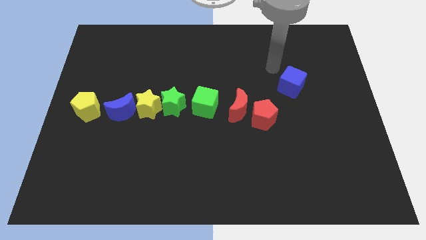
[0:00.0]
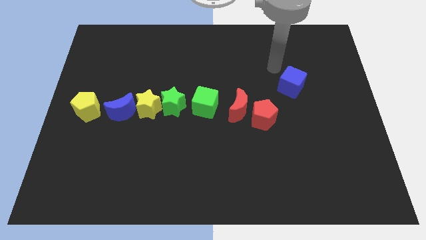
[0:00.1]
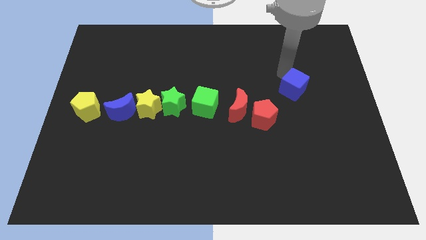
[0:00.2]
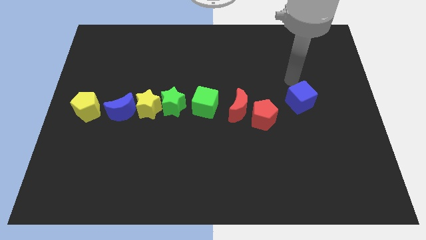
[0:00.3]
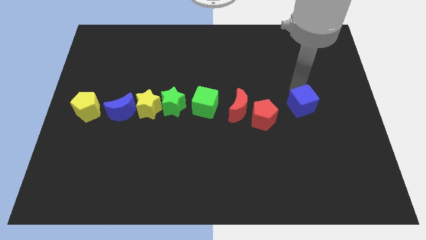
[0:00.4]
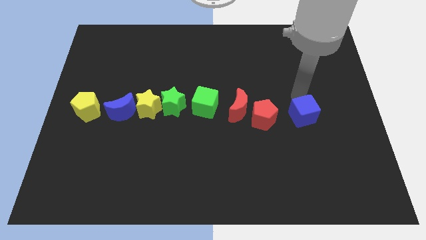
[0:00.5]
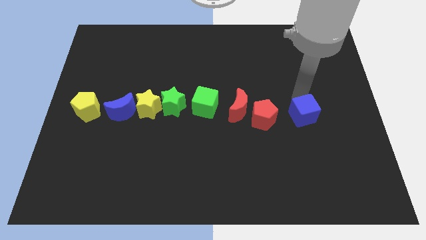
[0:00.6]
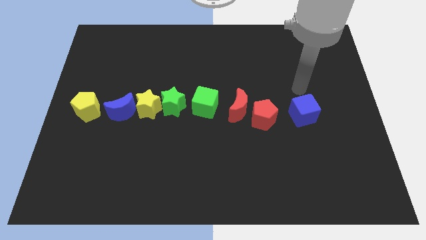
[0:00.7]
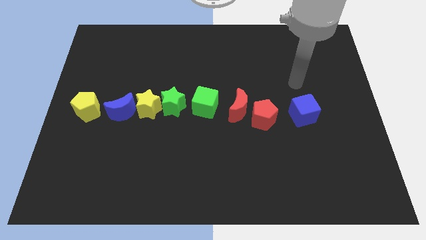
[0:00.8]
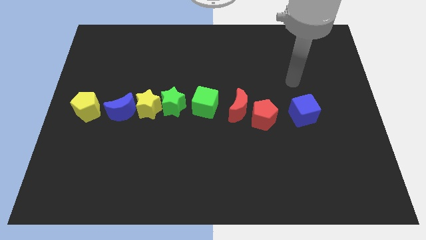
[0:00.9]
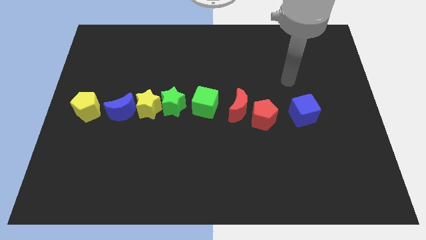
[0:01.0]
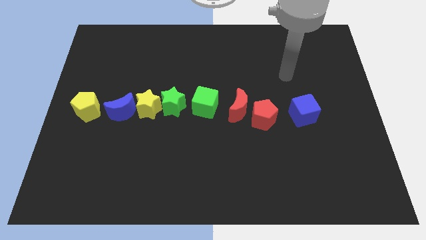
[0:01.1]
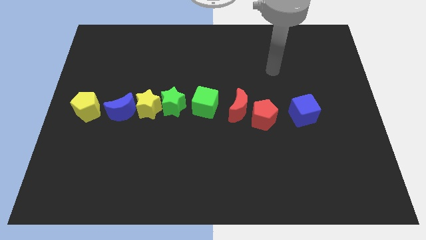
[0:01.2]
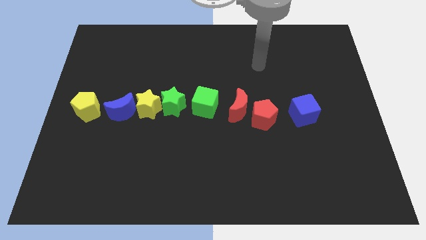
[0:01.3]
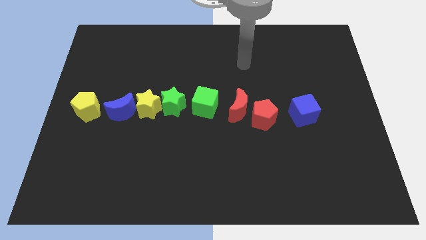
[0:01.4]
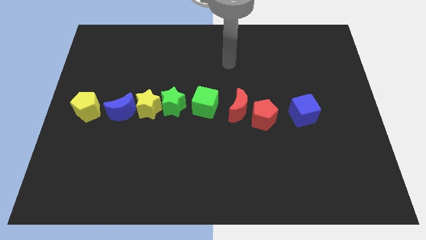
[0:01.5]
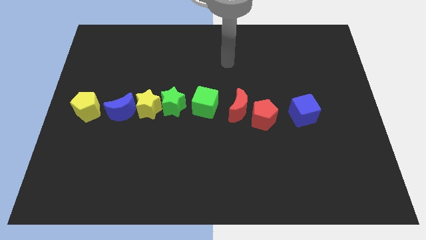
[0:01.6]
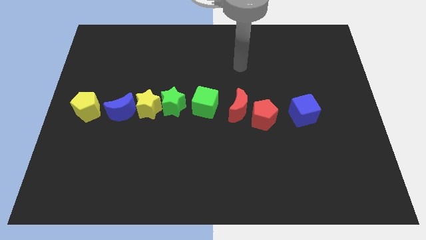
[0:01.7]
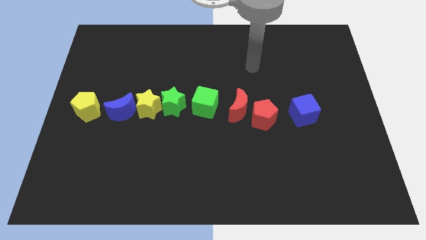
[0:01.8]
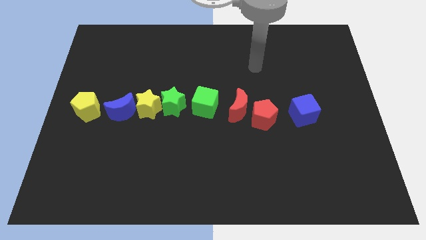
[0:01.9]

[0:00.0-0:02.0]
place the blue cube to the right of the horizontal line of blocks

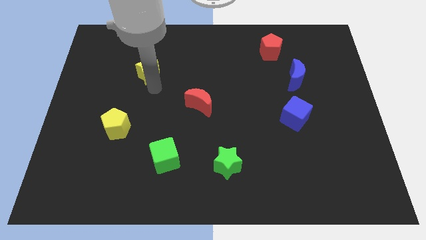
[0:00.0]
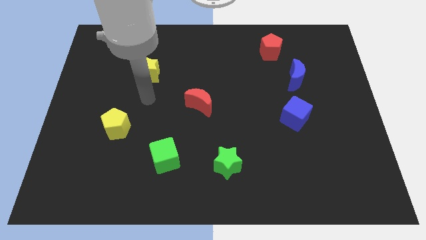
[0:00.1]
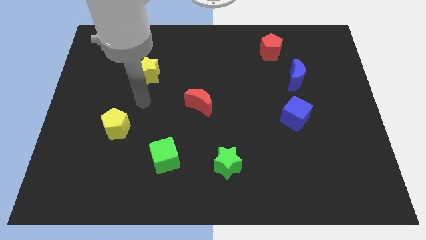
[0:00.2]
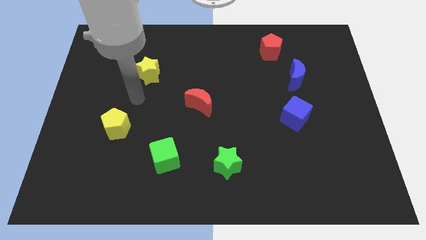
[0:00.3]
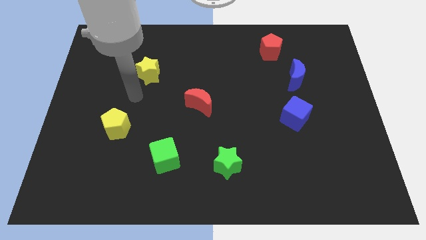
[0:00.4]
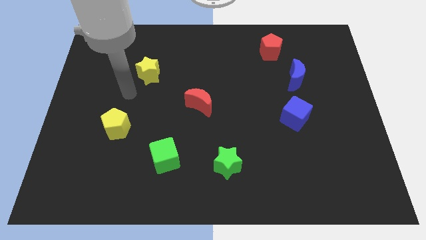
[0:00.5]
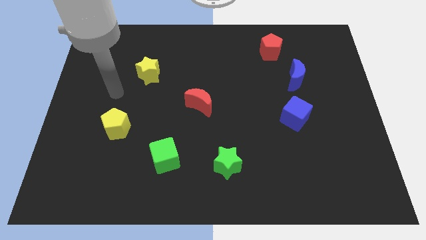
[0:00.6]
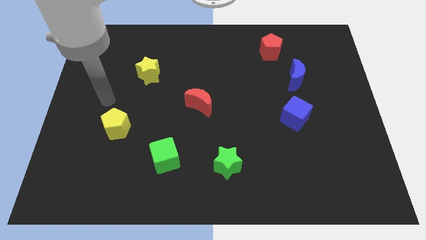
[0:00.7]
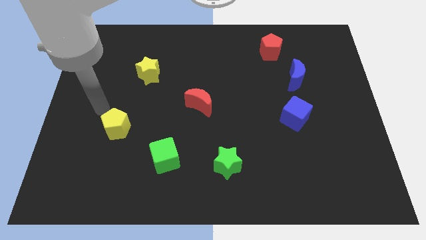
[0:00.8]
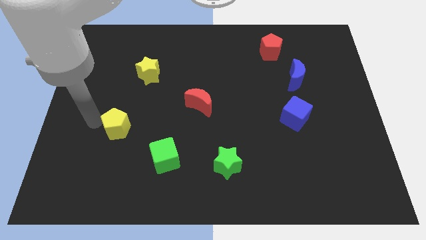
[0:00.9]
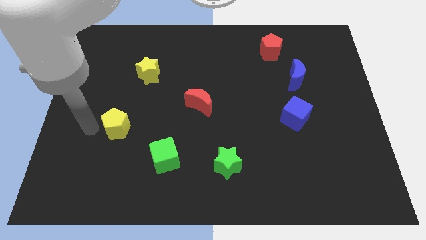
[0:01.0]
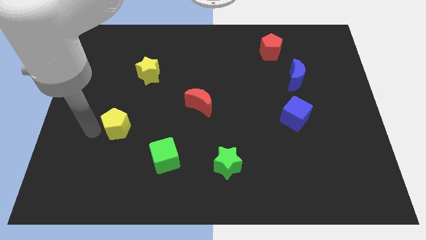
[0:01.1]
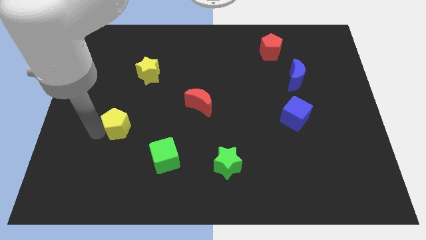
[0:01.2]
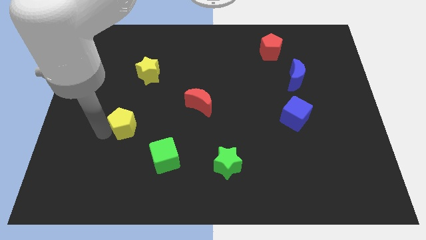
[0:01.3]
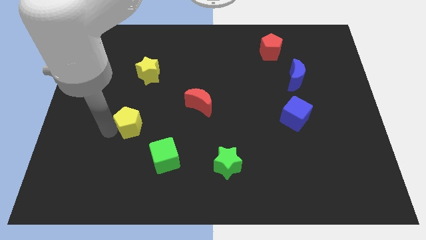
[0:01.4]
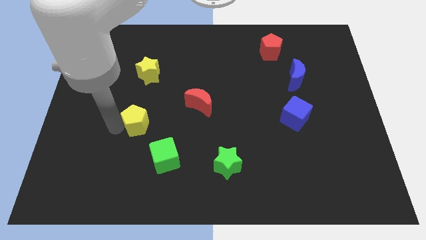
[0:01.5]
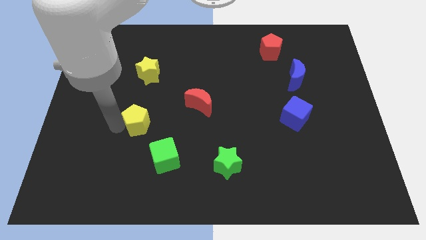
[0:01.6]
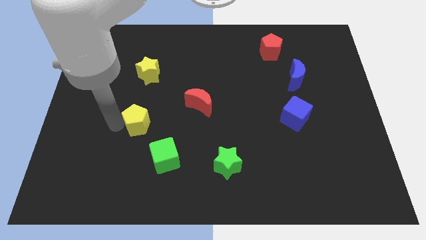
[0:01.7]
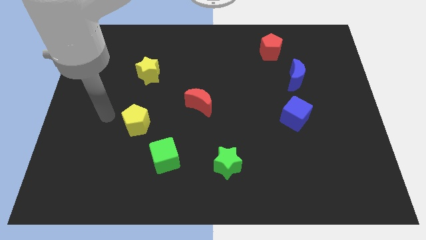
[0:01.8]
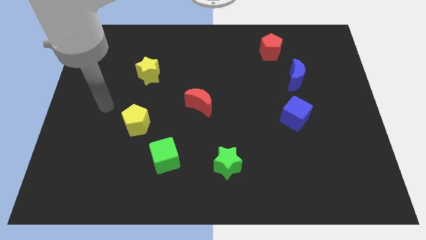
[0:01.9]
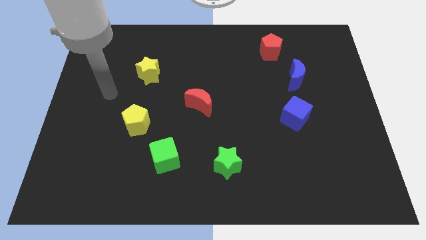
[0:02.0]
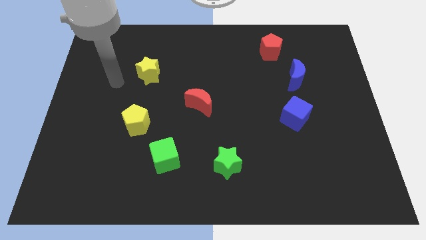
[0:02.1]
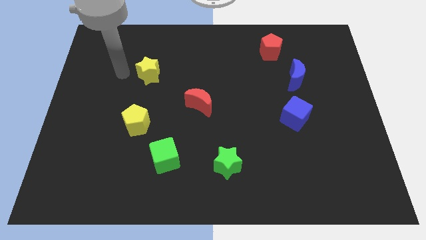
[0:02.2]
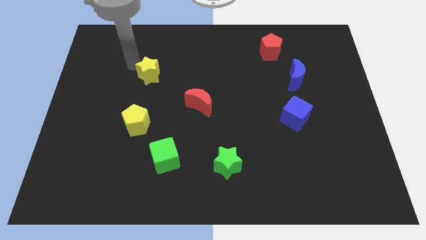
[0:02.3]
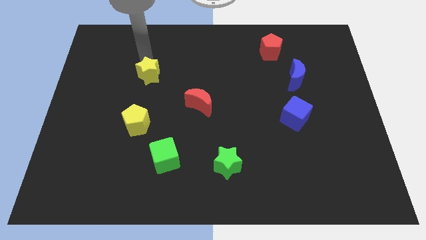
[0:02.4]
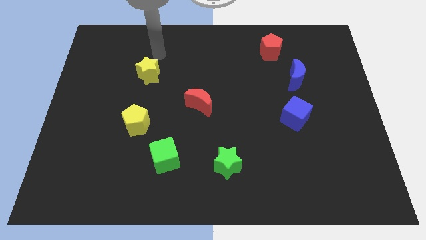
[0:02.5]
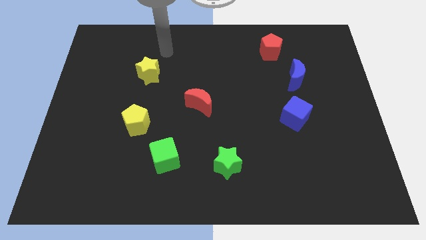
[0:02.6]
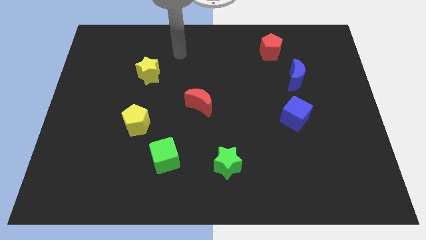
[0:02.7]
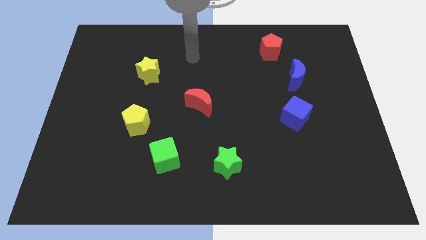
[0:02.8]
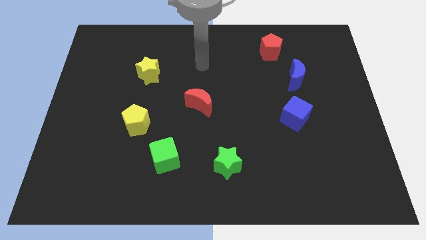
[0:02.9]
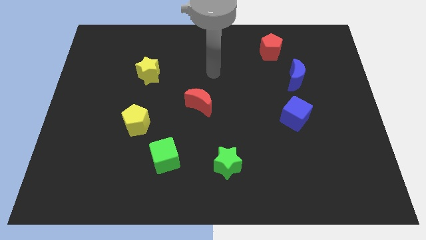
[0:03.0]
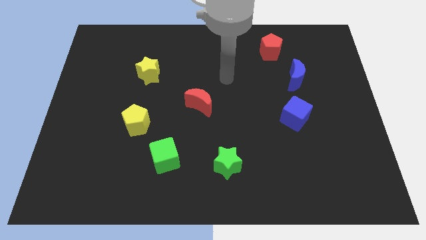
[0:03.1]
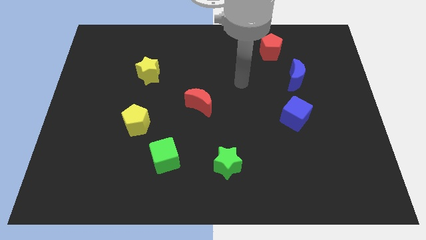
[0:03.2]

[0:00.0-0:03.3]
place the yellow pentagon diagonally below the bottom the left side of the red crescent

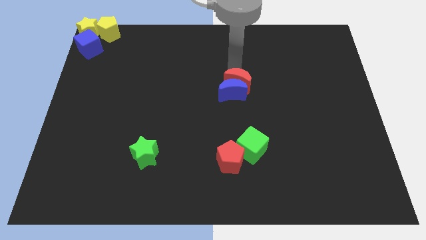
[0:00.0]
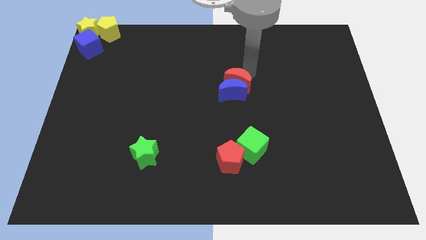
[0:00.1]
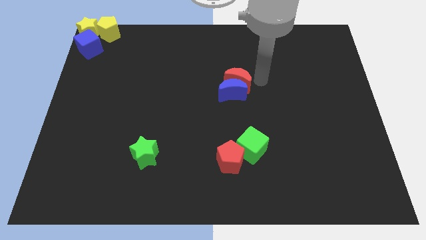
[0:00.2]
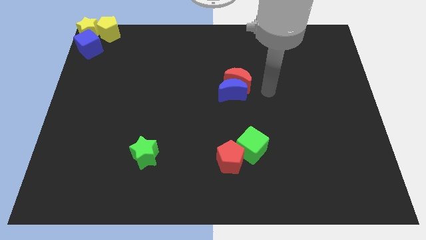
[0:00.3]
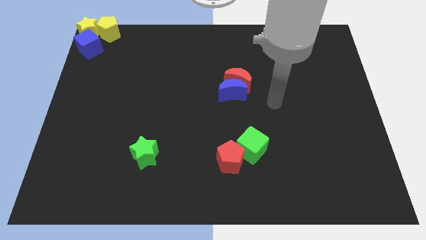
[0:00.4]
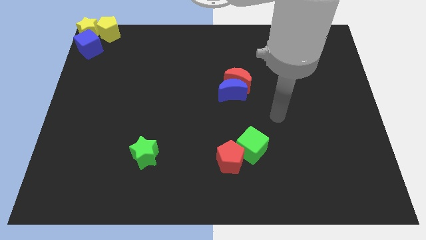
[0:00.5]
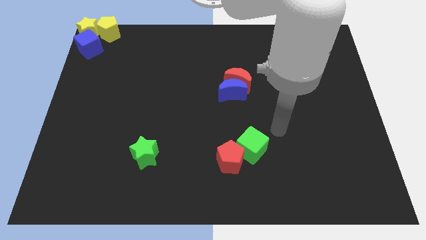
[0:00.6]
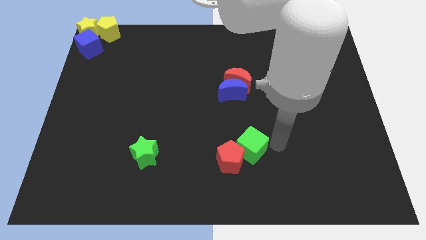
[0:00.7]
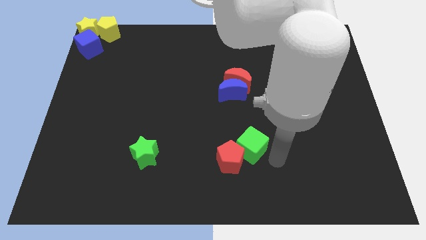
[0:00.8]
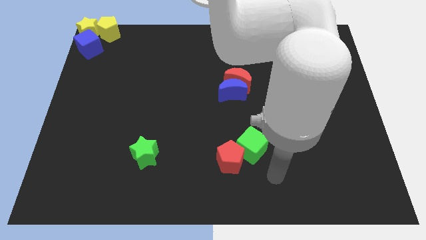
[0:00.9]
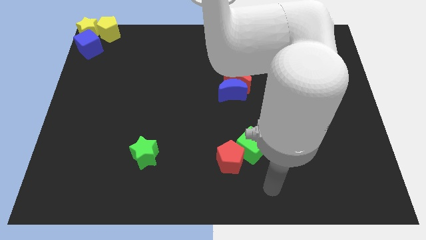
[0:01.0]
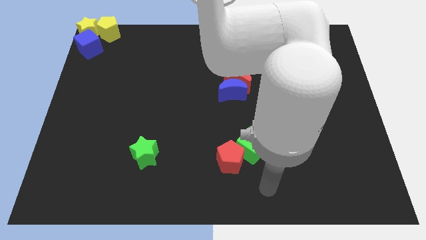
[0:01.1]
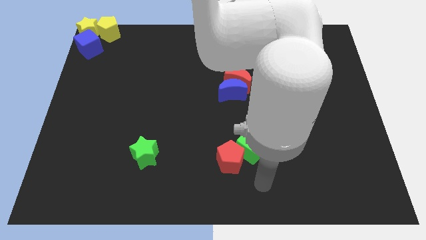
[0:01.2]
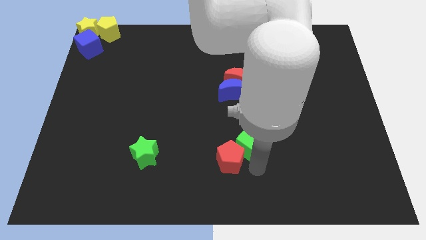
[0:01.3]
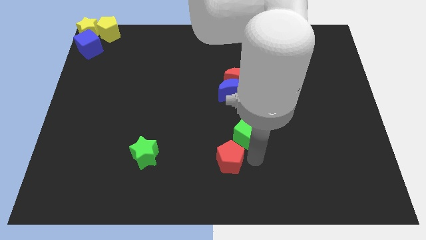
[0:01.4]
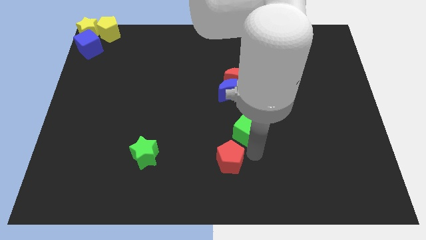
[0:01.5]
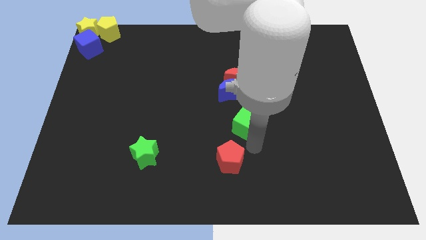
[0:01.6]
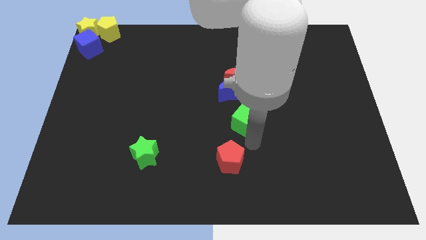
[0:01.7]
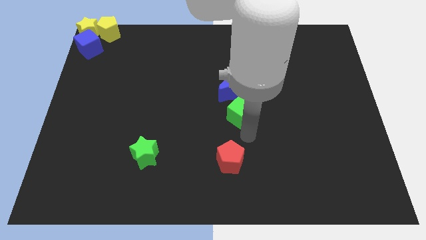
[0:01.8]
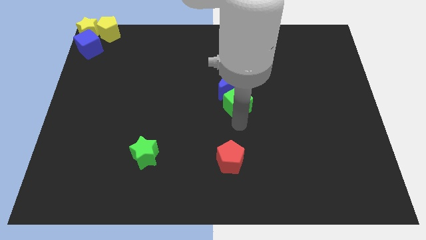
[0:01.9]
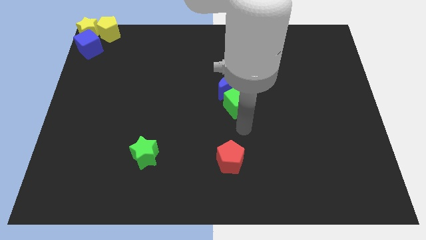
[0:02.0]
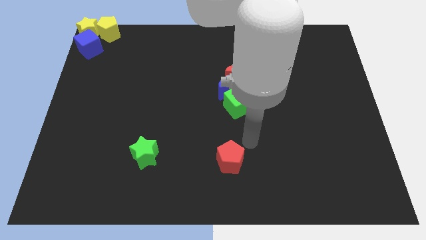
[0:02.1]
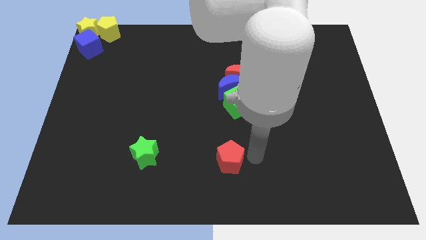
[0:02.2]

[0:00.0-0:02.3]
push the green cube into the blue moon

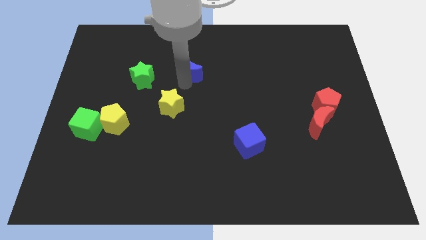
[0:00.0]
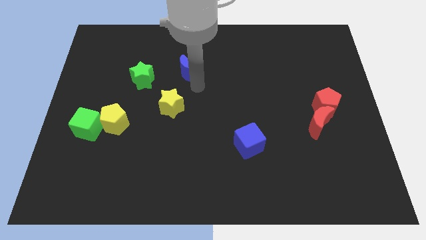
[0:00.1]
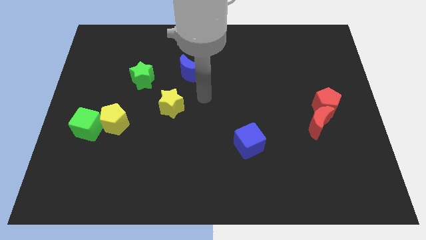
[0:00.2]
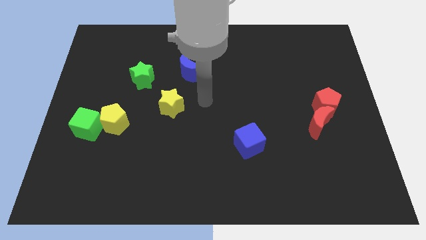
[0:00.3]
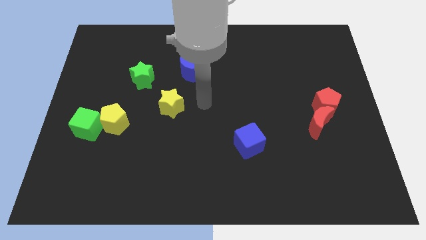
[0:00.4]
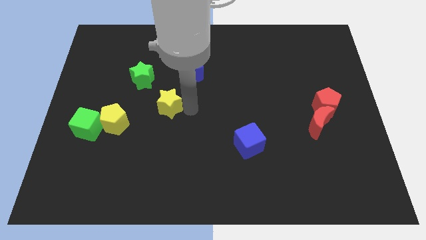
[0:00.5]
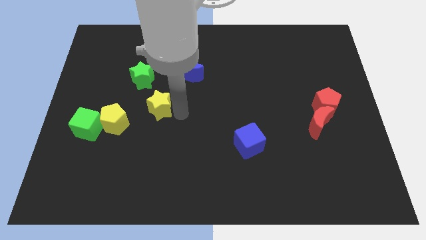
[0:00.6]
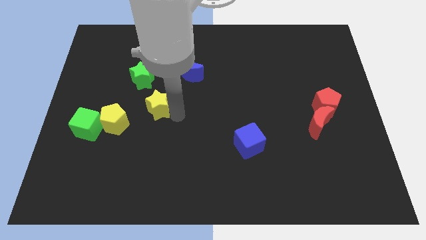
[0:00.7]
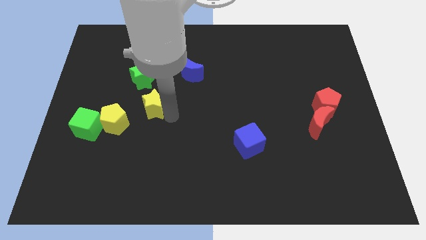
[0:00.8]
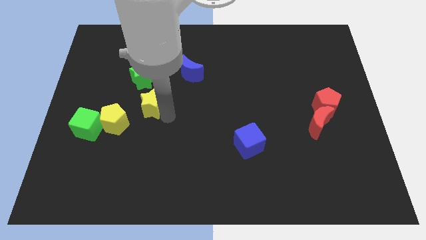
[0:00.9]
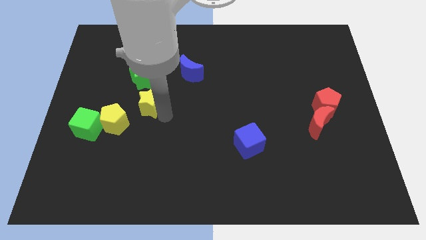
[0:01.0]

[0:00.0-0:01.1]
separate yellow star and blue moon

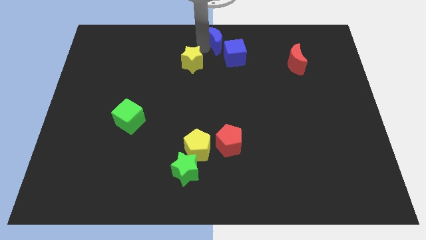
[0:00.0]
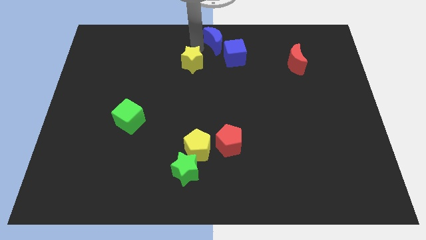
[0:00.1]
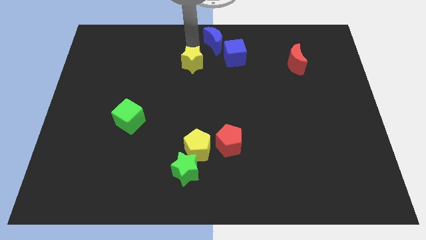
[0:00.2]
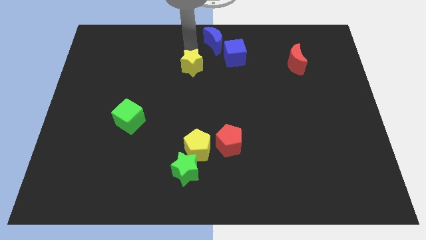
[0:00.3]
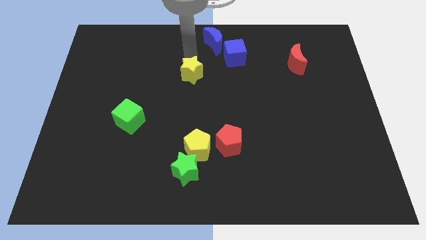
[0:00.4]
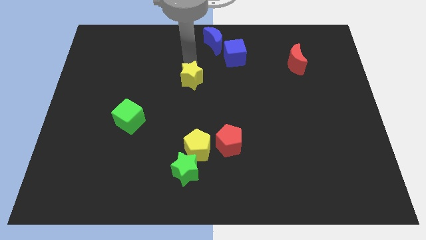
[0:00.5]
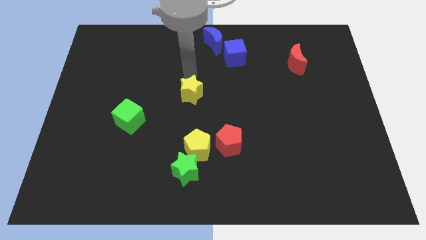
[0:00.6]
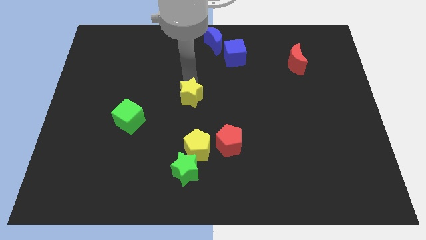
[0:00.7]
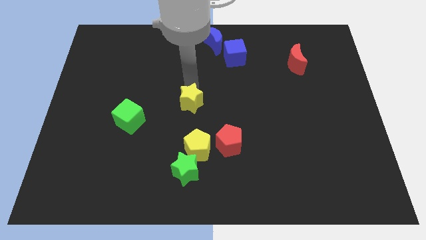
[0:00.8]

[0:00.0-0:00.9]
move the yellow star to the center of the board
